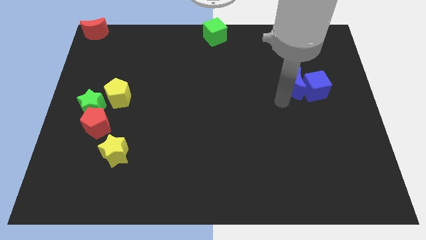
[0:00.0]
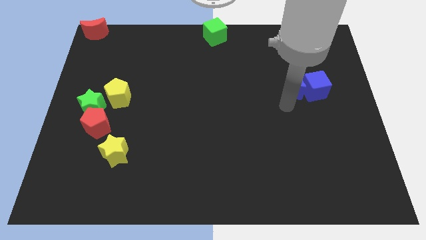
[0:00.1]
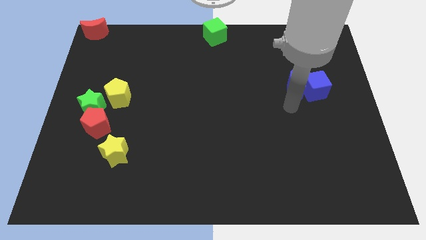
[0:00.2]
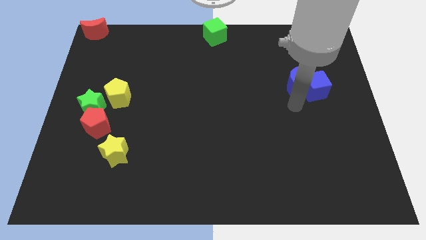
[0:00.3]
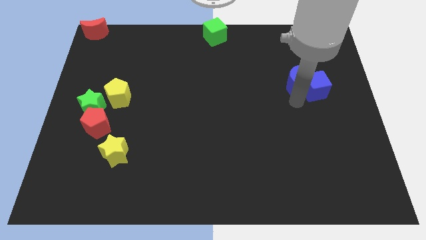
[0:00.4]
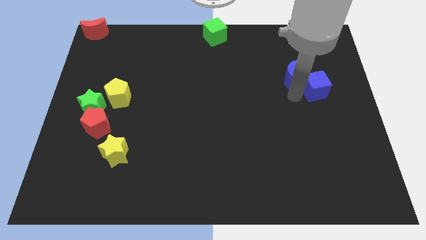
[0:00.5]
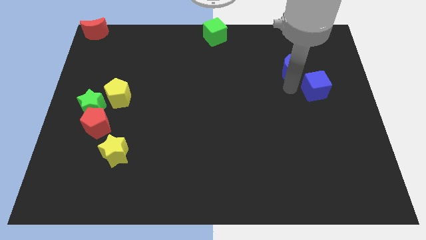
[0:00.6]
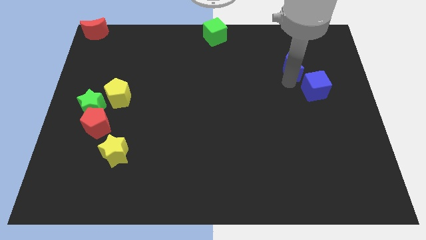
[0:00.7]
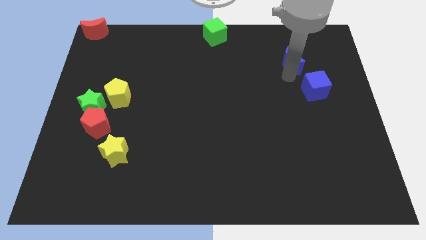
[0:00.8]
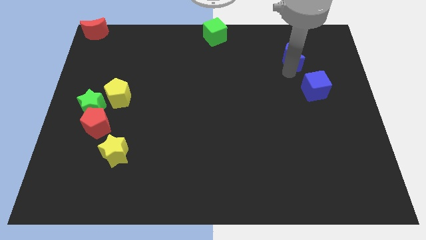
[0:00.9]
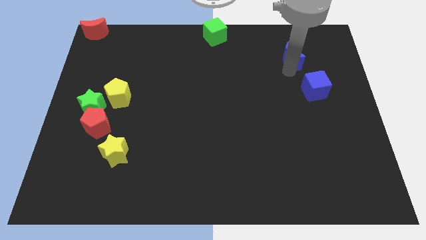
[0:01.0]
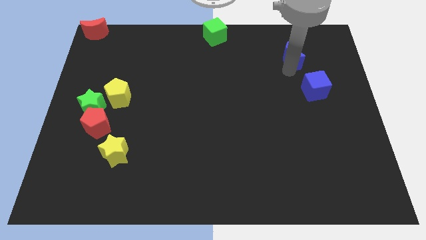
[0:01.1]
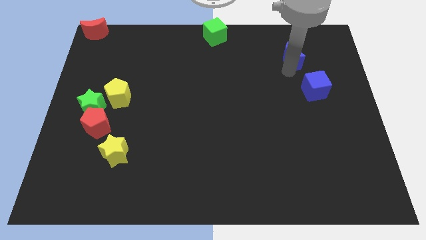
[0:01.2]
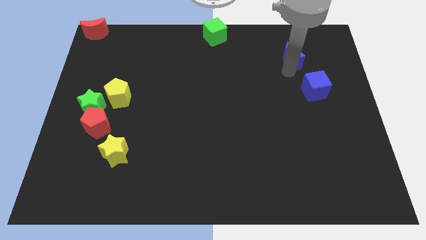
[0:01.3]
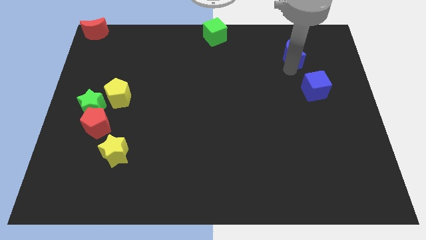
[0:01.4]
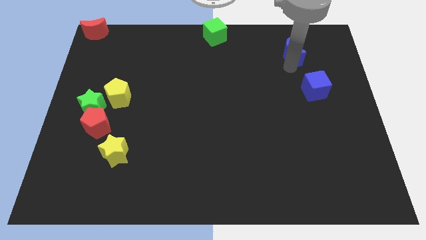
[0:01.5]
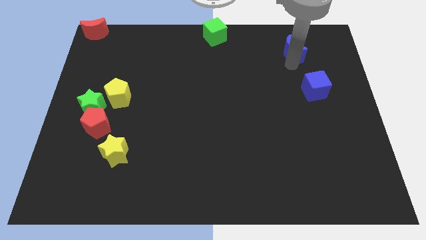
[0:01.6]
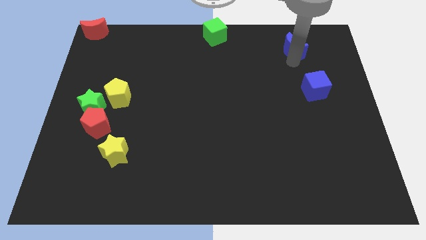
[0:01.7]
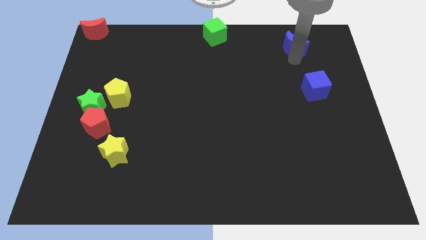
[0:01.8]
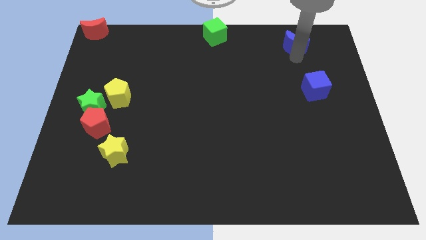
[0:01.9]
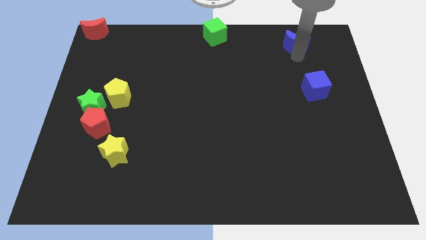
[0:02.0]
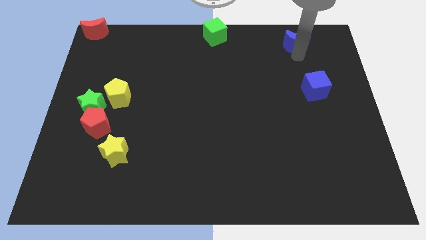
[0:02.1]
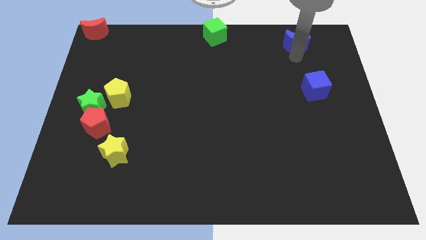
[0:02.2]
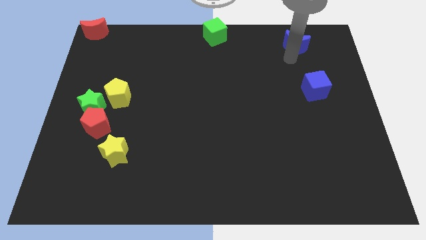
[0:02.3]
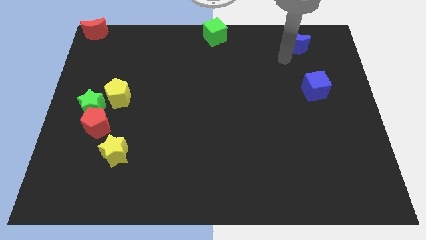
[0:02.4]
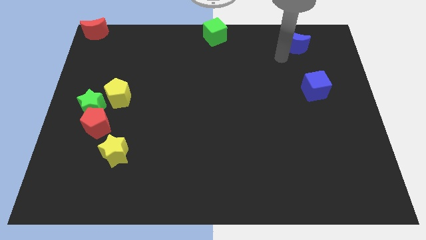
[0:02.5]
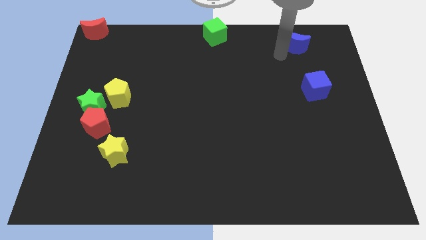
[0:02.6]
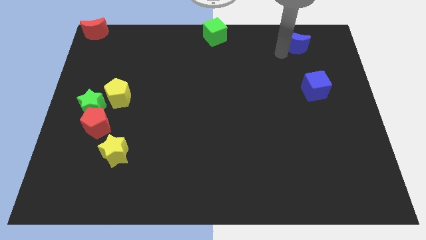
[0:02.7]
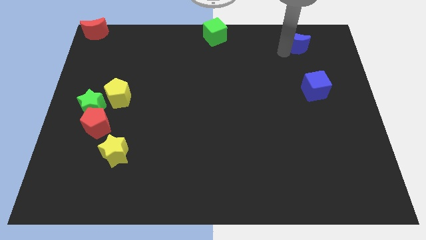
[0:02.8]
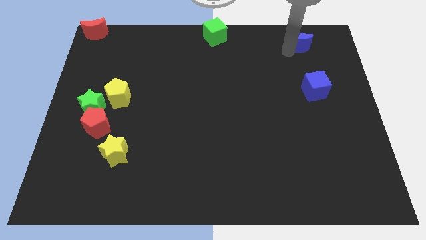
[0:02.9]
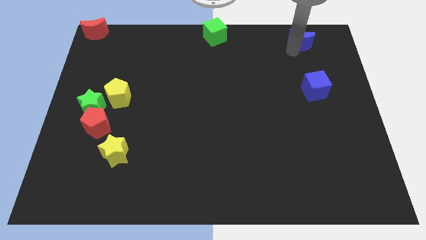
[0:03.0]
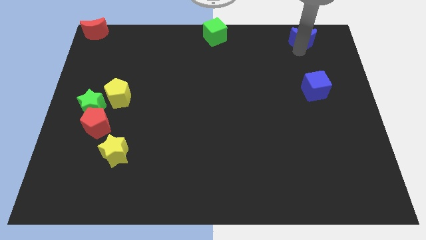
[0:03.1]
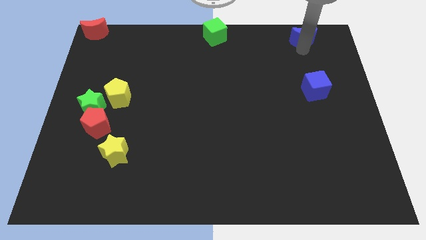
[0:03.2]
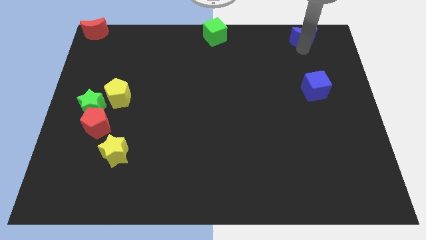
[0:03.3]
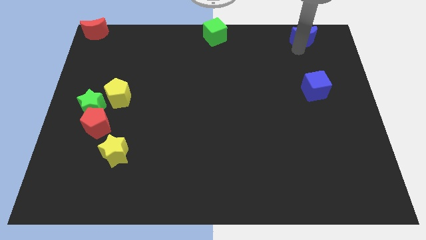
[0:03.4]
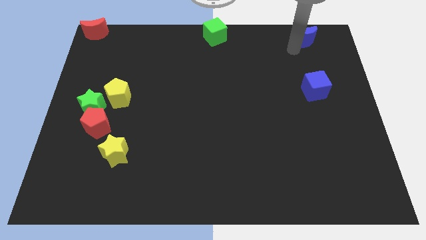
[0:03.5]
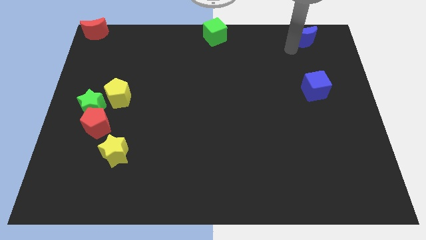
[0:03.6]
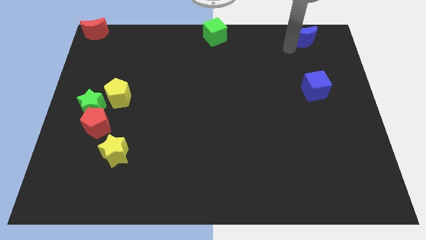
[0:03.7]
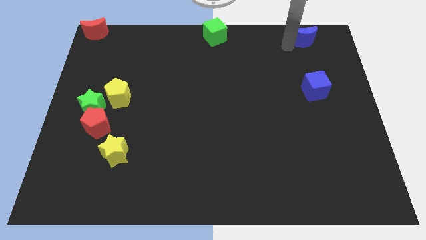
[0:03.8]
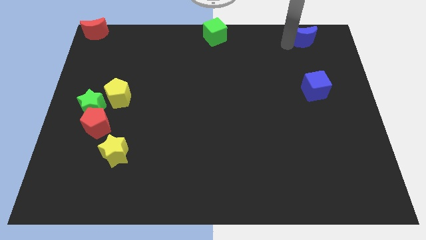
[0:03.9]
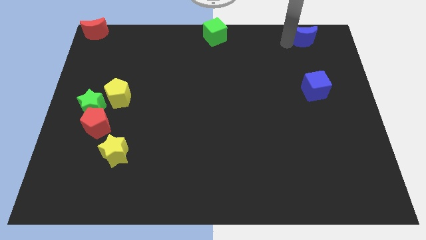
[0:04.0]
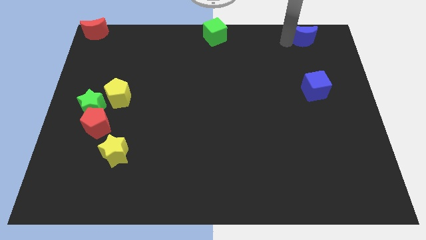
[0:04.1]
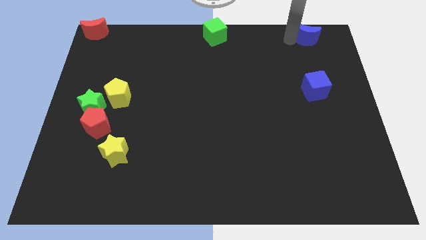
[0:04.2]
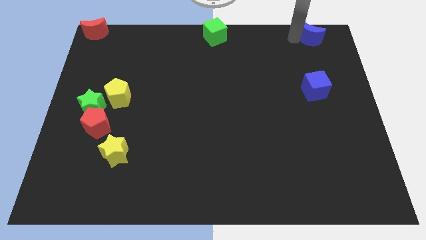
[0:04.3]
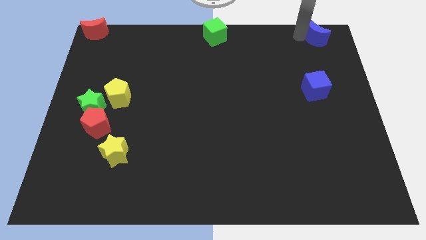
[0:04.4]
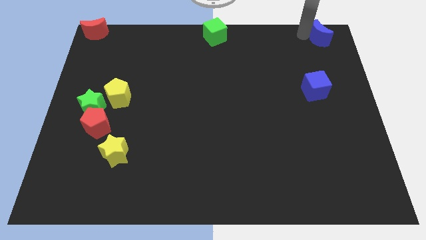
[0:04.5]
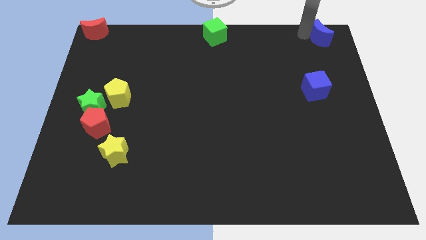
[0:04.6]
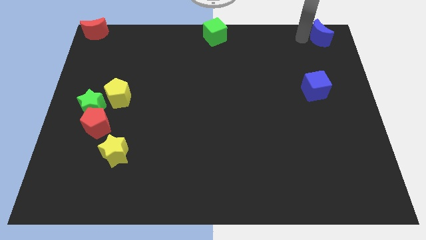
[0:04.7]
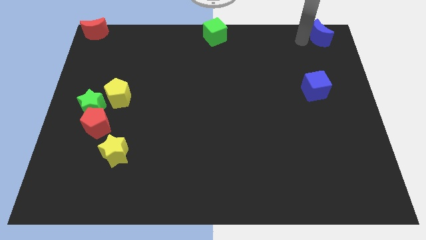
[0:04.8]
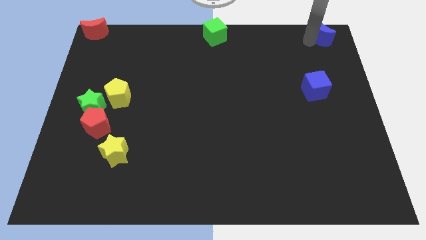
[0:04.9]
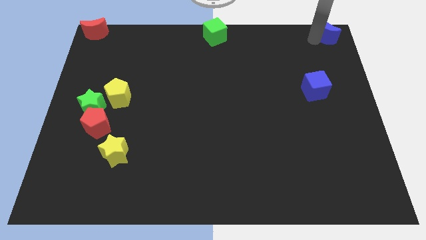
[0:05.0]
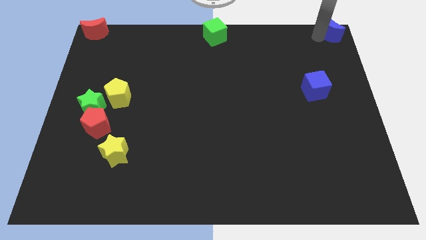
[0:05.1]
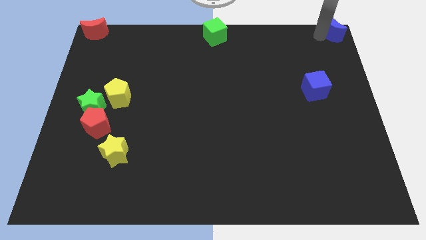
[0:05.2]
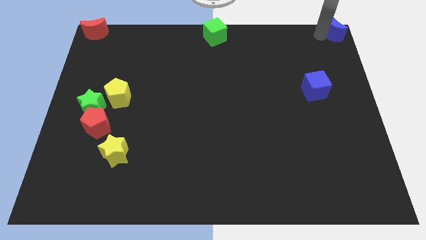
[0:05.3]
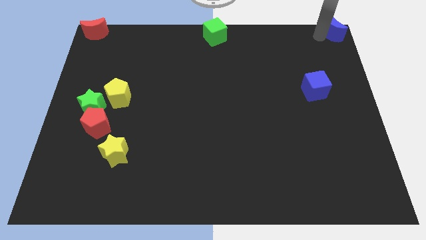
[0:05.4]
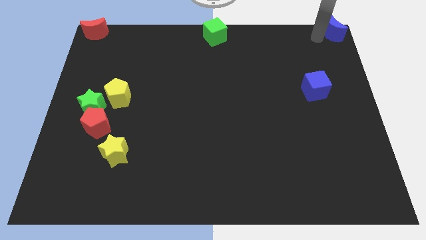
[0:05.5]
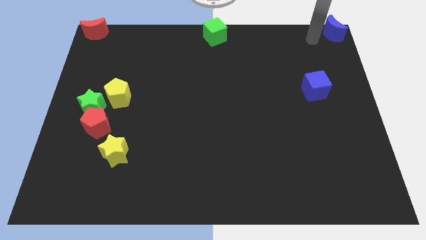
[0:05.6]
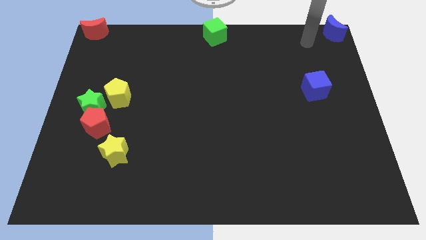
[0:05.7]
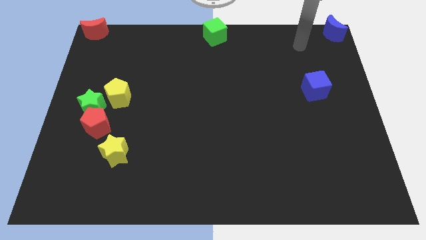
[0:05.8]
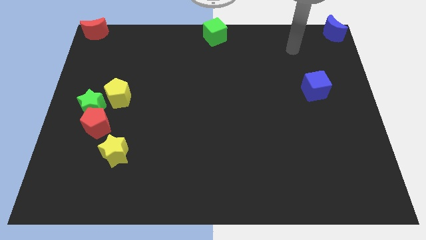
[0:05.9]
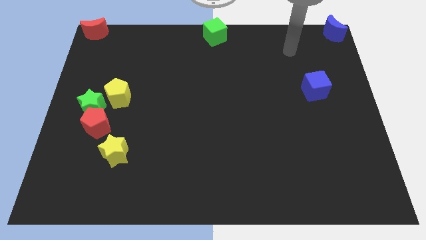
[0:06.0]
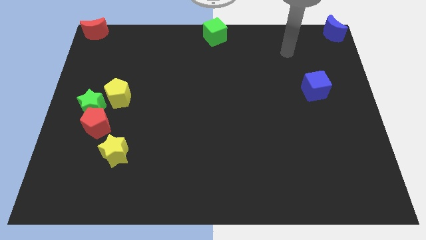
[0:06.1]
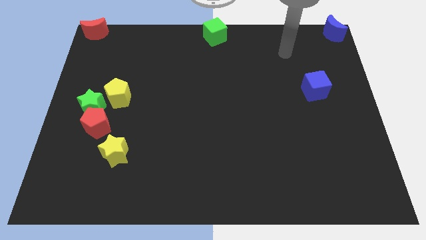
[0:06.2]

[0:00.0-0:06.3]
move the blue crescent to the top right corner of the board

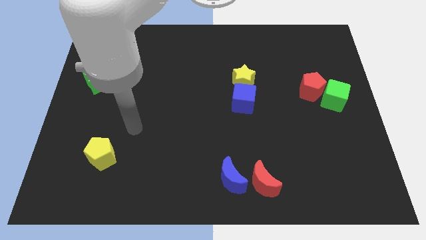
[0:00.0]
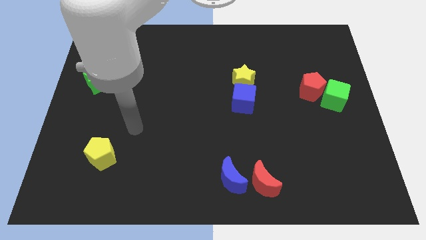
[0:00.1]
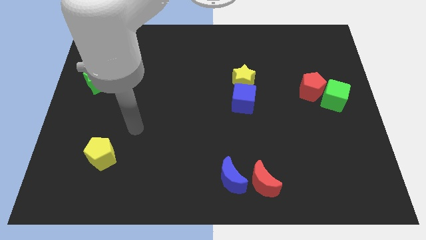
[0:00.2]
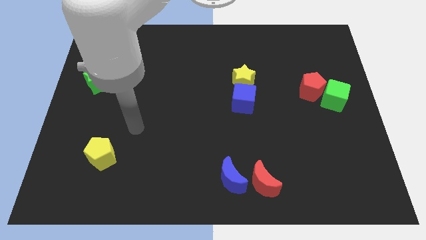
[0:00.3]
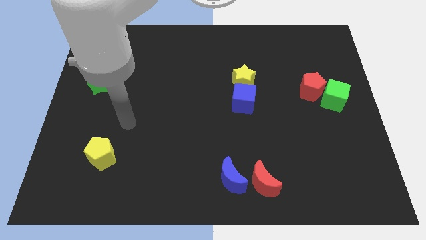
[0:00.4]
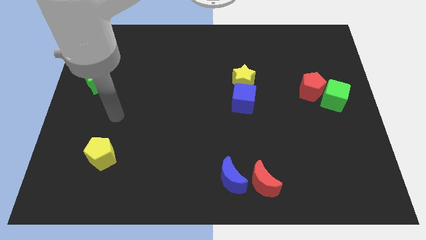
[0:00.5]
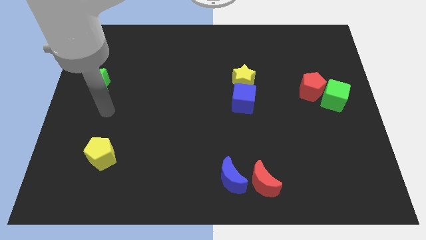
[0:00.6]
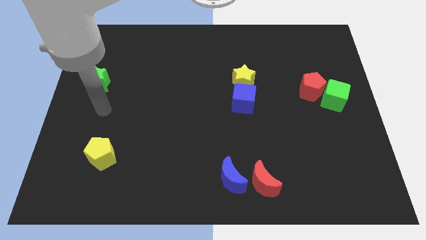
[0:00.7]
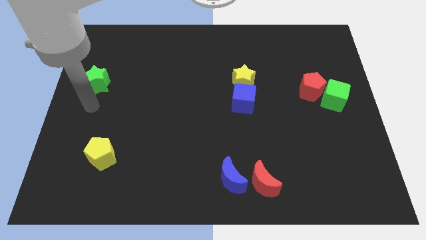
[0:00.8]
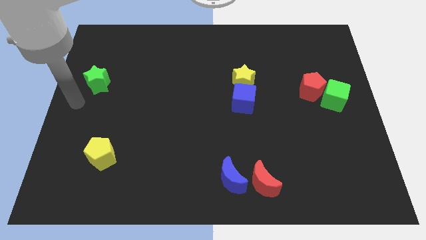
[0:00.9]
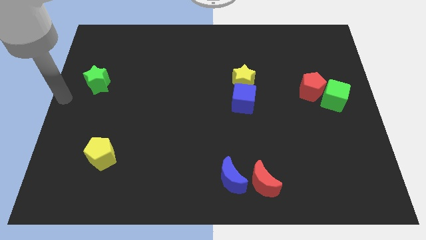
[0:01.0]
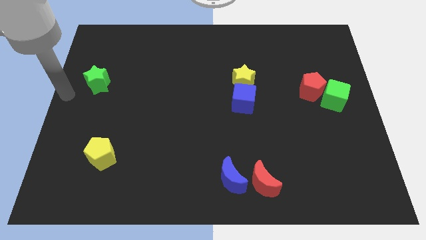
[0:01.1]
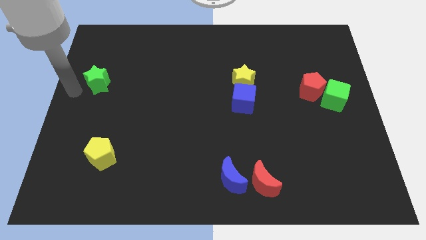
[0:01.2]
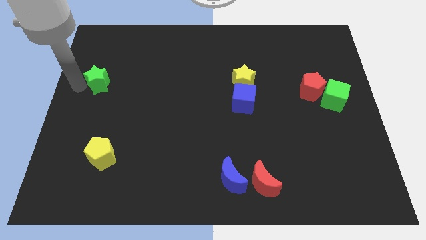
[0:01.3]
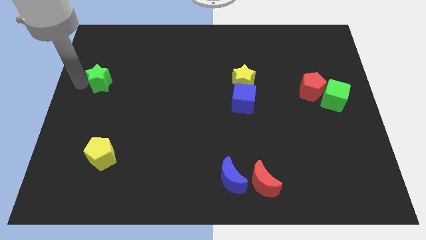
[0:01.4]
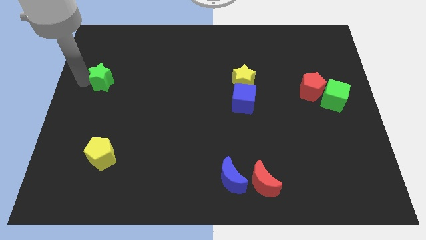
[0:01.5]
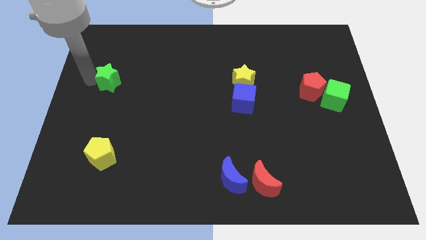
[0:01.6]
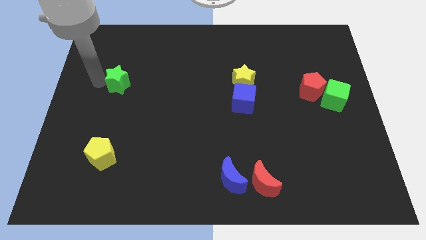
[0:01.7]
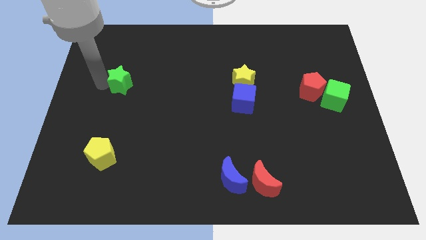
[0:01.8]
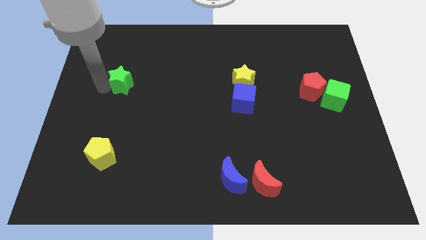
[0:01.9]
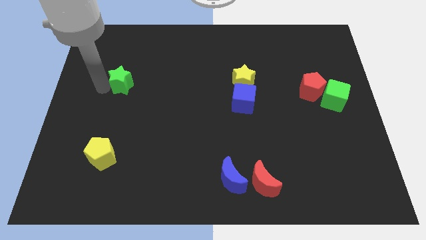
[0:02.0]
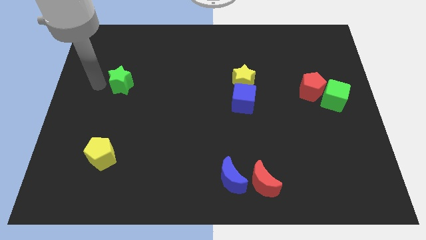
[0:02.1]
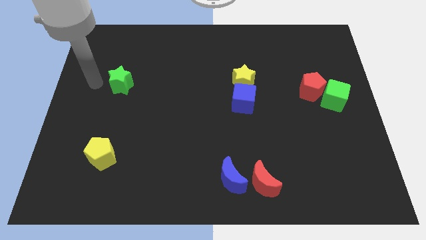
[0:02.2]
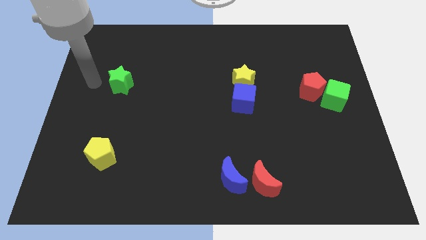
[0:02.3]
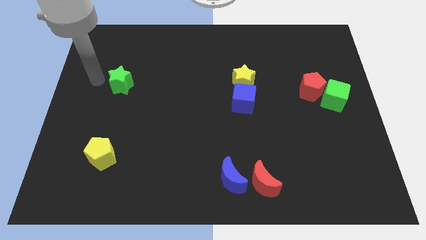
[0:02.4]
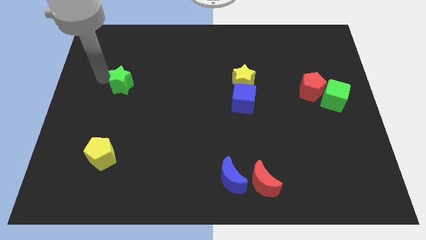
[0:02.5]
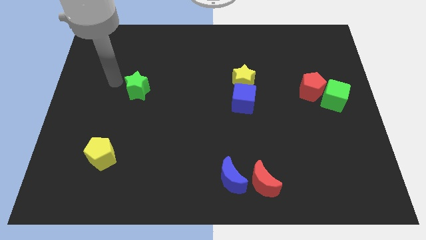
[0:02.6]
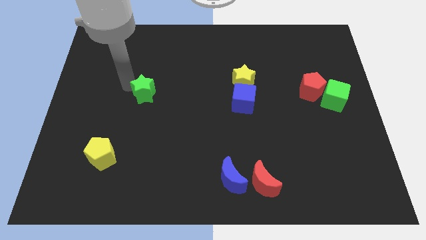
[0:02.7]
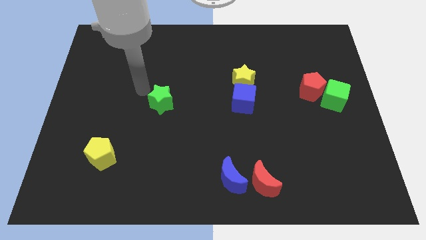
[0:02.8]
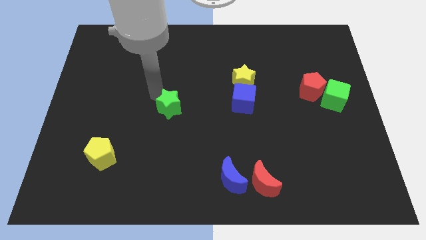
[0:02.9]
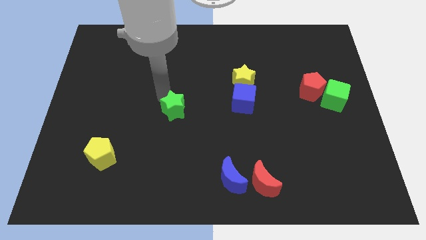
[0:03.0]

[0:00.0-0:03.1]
move green star middle of the board
